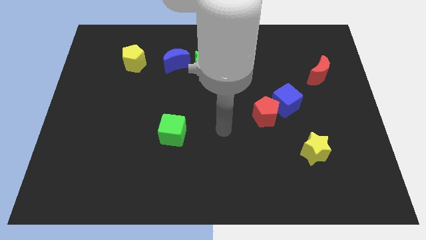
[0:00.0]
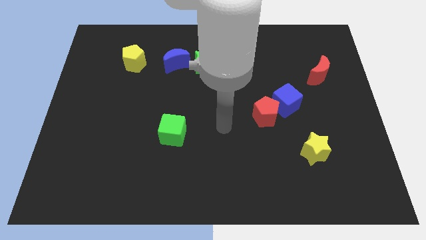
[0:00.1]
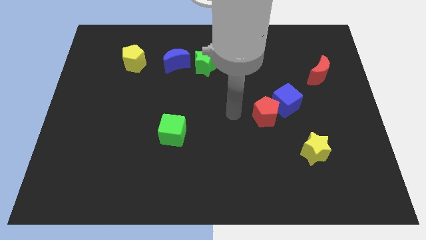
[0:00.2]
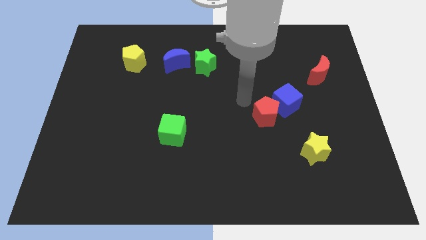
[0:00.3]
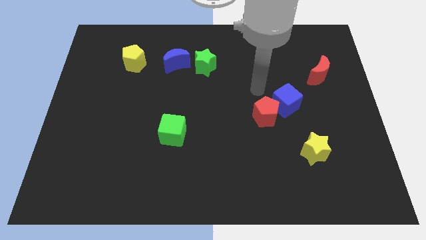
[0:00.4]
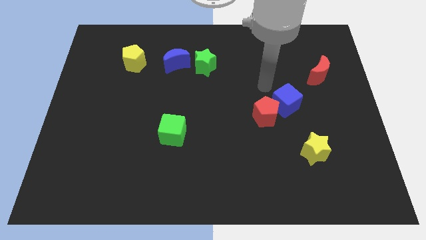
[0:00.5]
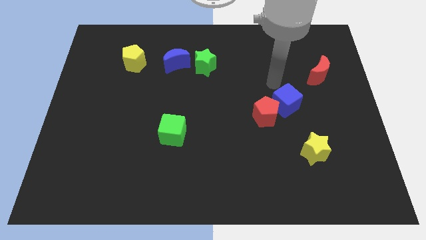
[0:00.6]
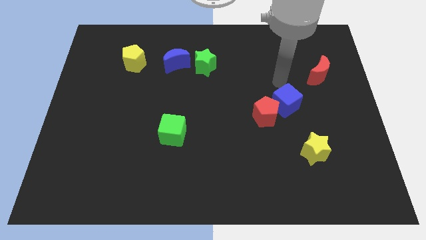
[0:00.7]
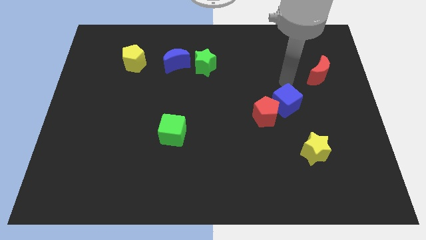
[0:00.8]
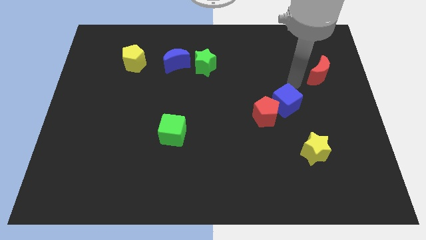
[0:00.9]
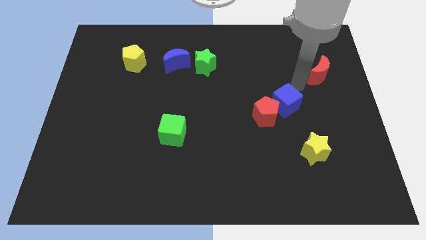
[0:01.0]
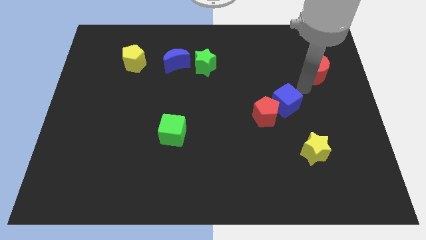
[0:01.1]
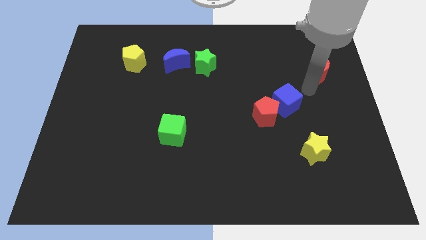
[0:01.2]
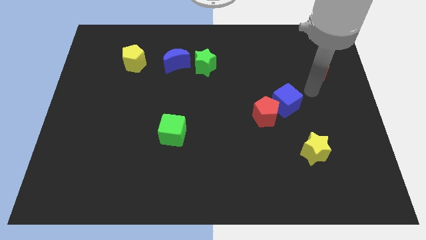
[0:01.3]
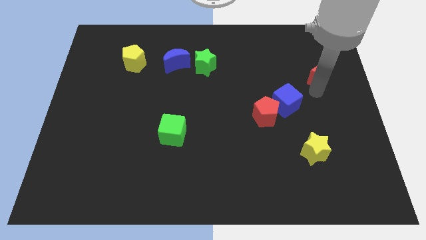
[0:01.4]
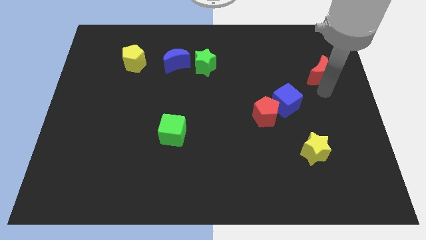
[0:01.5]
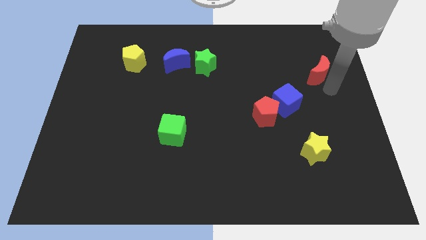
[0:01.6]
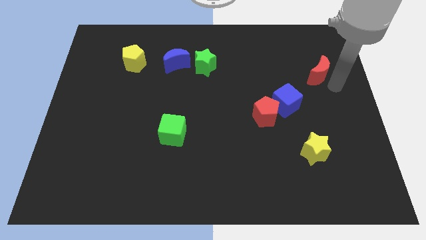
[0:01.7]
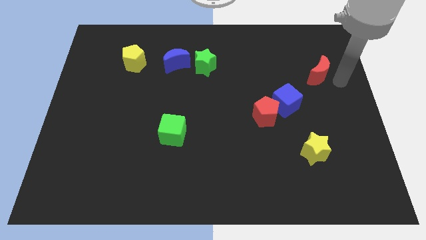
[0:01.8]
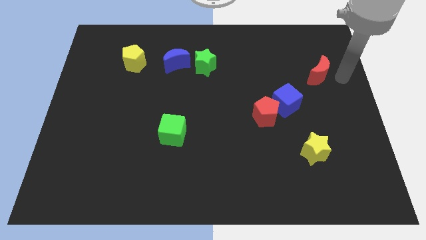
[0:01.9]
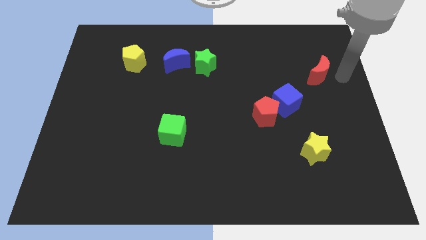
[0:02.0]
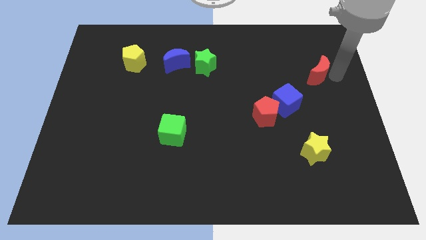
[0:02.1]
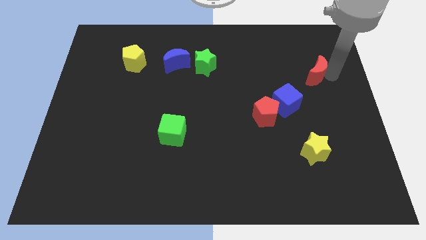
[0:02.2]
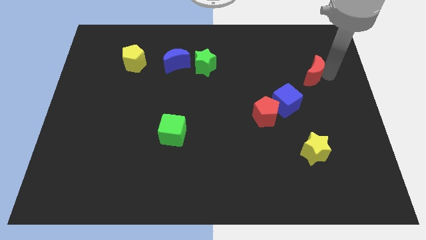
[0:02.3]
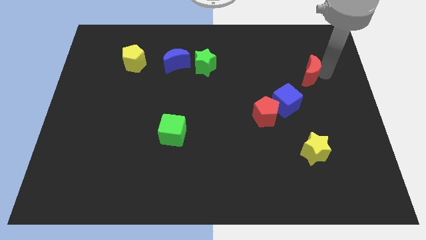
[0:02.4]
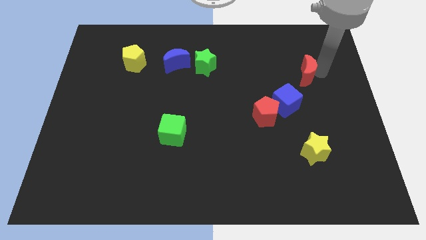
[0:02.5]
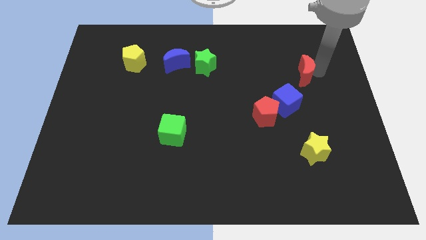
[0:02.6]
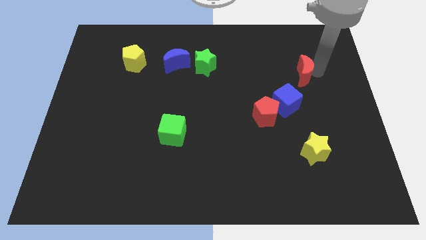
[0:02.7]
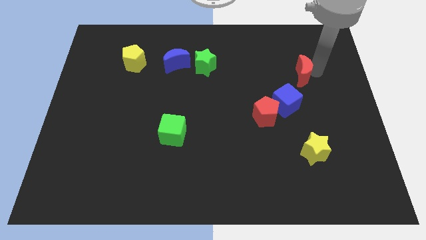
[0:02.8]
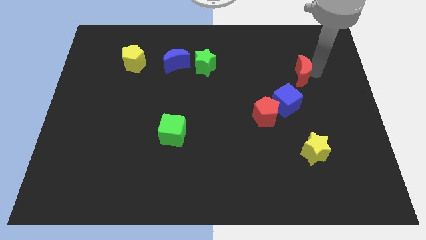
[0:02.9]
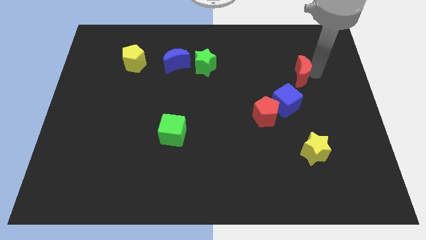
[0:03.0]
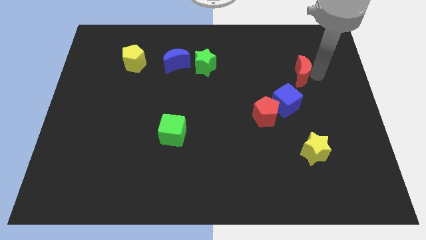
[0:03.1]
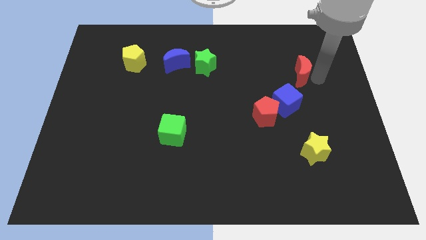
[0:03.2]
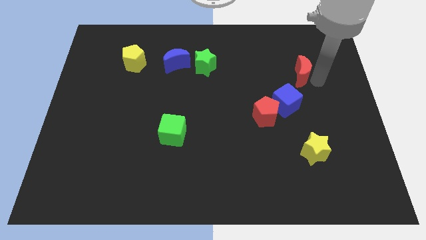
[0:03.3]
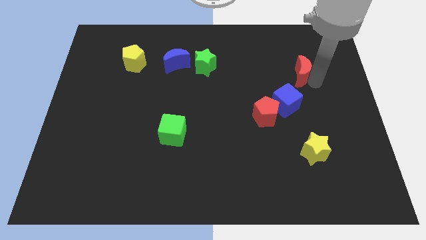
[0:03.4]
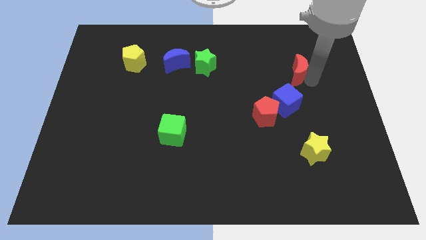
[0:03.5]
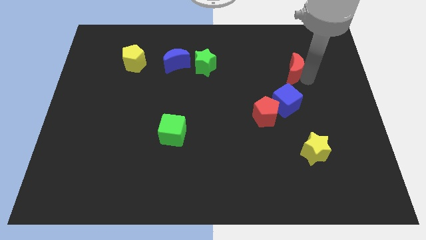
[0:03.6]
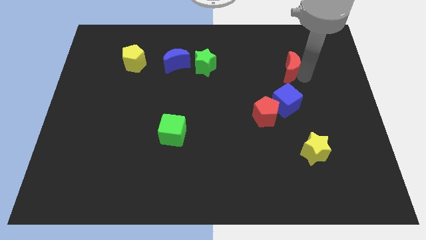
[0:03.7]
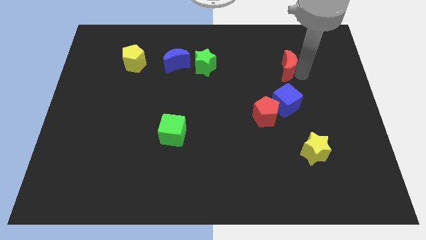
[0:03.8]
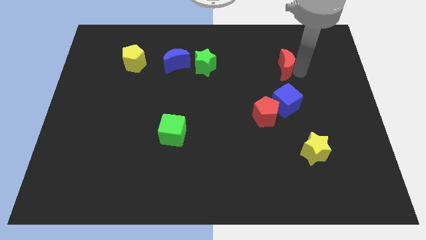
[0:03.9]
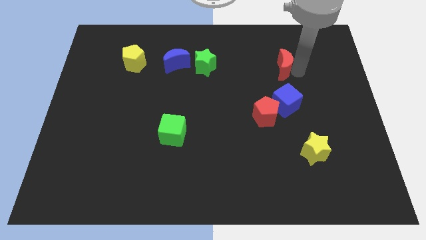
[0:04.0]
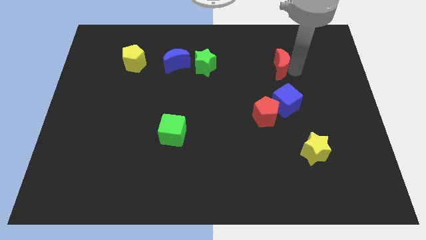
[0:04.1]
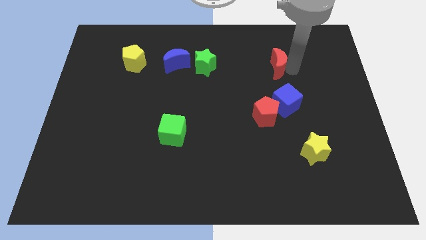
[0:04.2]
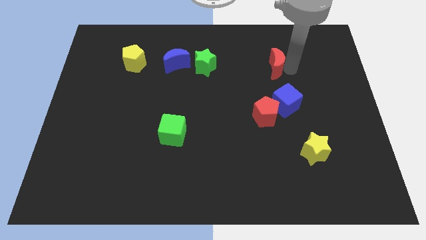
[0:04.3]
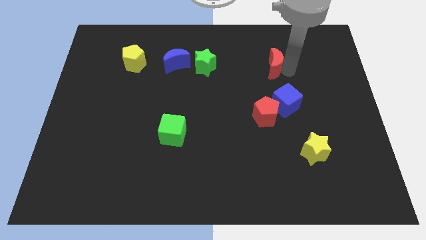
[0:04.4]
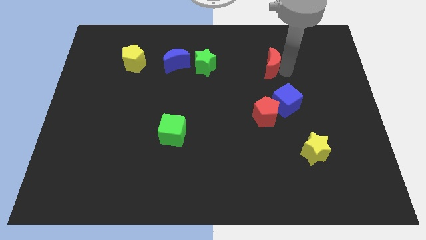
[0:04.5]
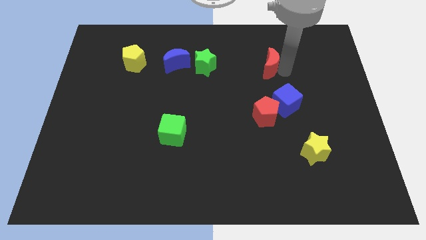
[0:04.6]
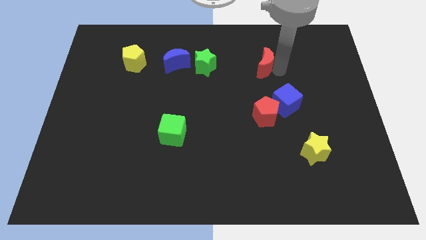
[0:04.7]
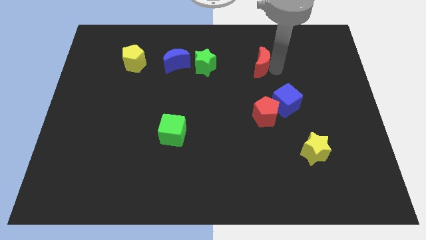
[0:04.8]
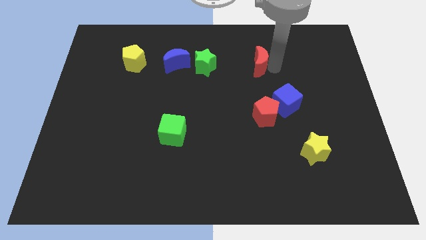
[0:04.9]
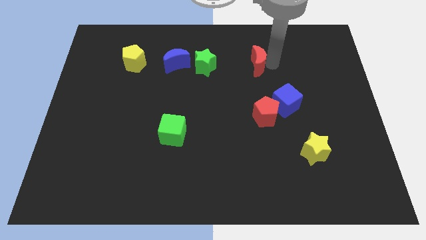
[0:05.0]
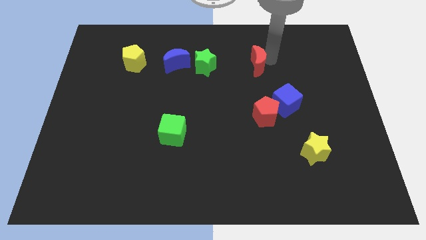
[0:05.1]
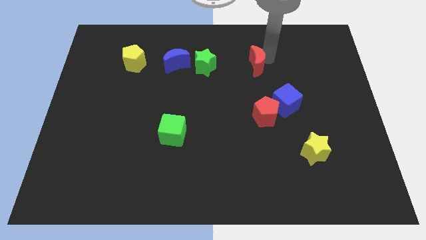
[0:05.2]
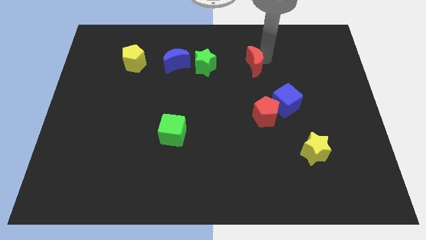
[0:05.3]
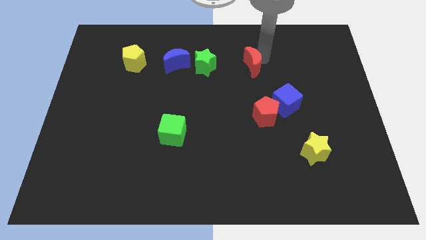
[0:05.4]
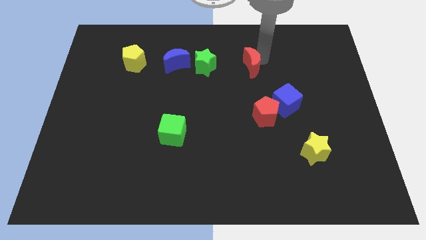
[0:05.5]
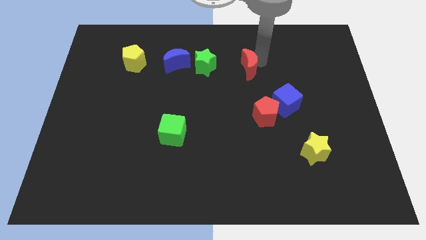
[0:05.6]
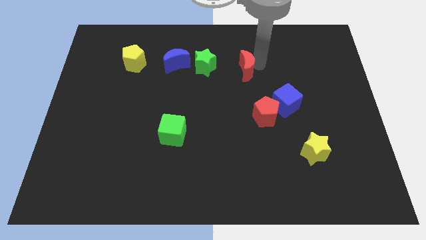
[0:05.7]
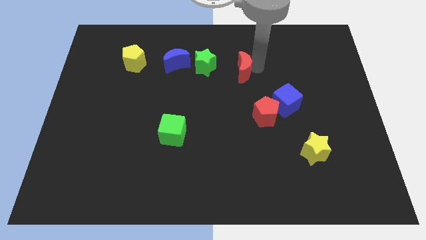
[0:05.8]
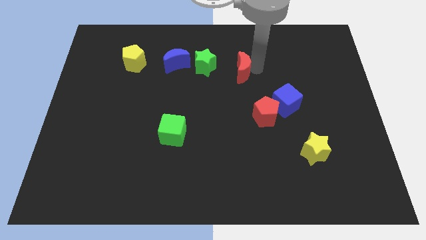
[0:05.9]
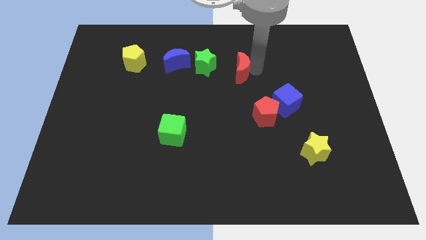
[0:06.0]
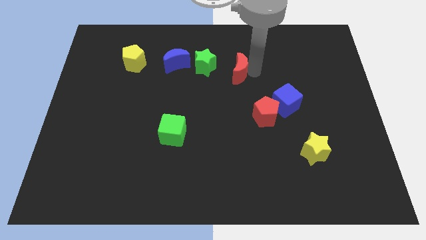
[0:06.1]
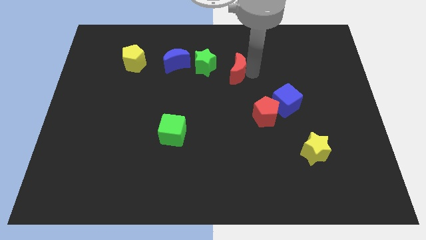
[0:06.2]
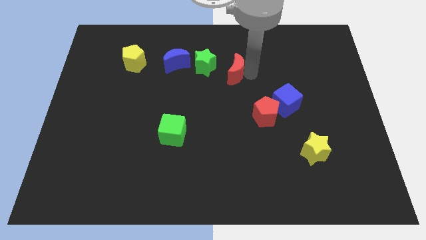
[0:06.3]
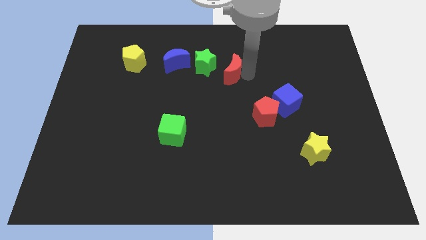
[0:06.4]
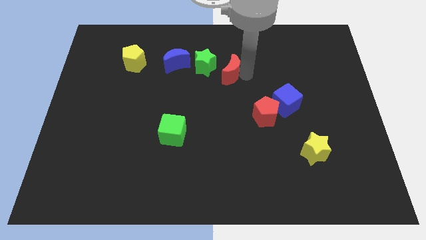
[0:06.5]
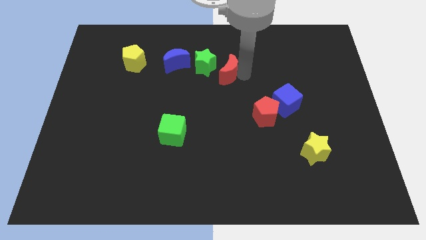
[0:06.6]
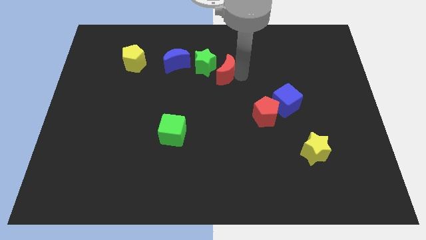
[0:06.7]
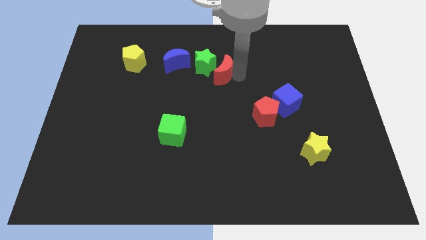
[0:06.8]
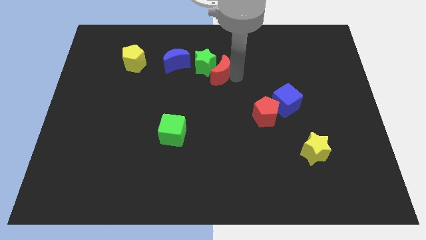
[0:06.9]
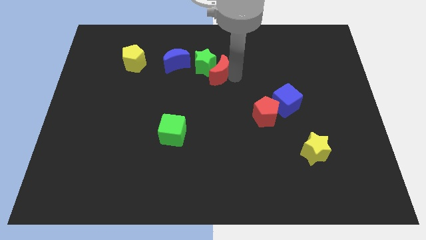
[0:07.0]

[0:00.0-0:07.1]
push the red moon to the green star

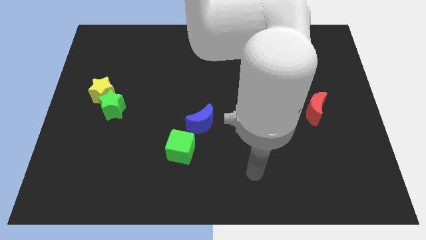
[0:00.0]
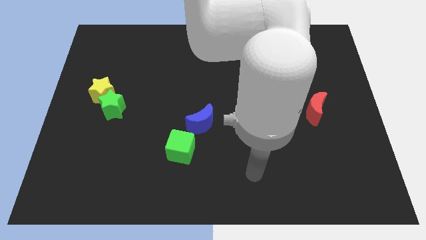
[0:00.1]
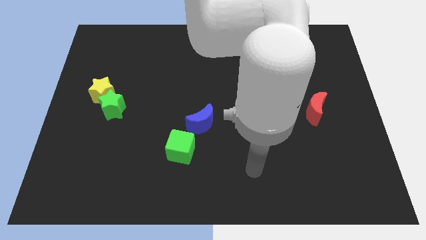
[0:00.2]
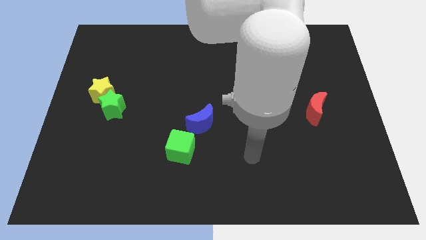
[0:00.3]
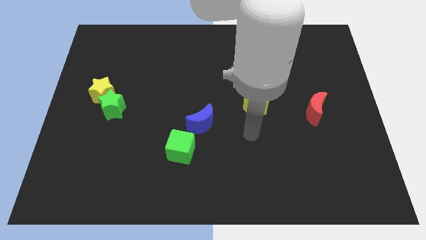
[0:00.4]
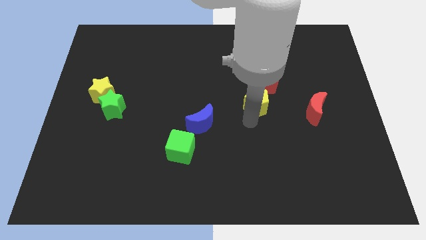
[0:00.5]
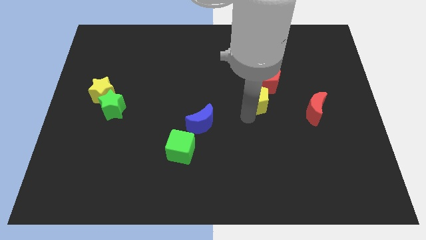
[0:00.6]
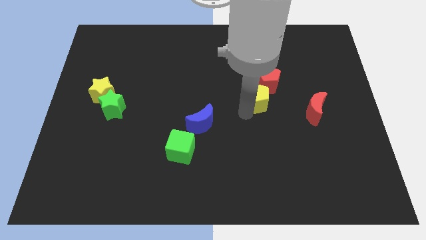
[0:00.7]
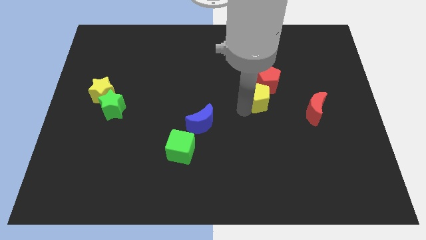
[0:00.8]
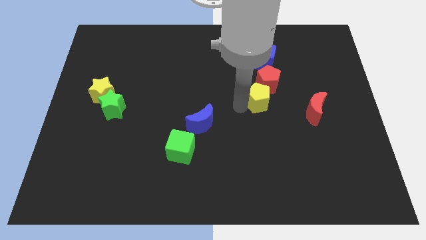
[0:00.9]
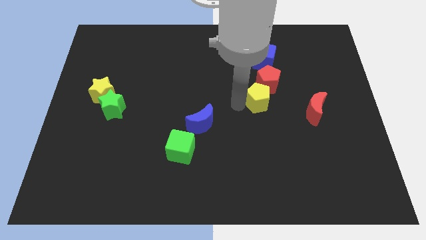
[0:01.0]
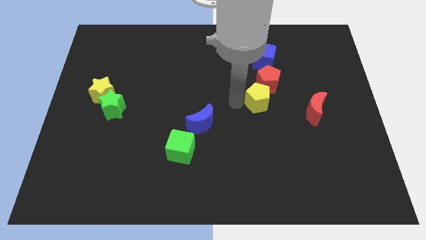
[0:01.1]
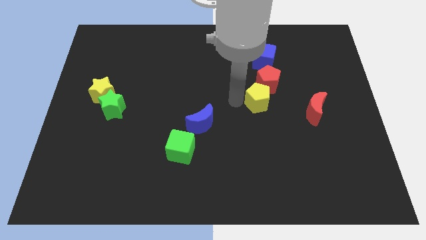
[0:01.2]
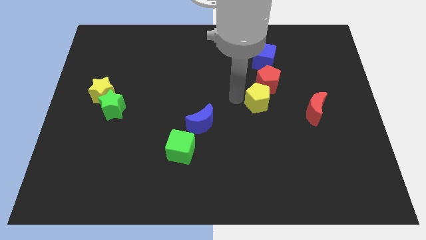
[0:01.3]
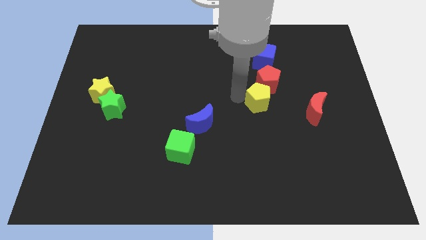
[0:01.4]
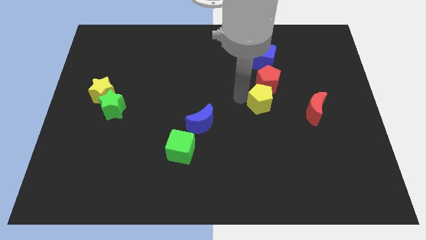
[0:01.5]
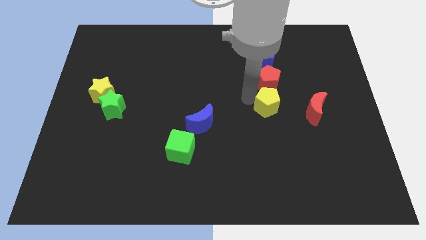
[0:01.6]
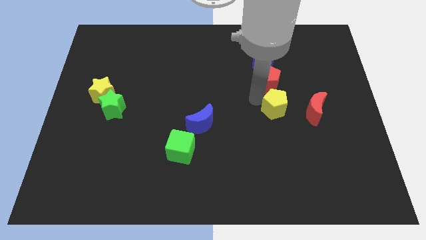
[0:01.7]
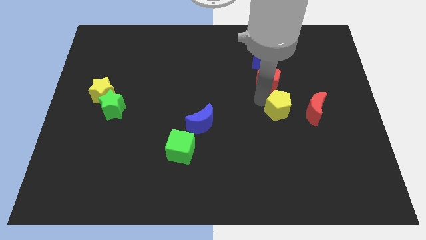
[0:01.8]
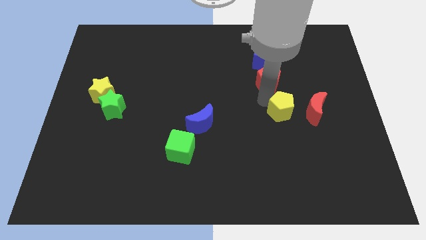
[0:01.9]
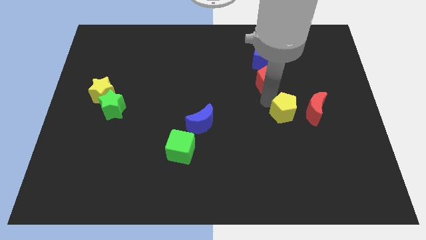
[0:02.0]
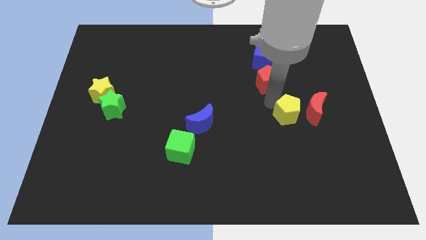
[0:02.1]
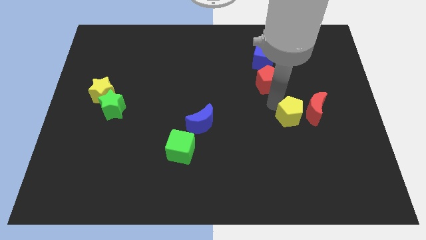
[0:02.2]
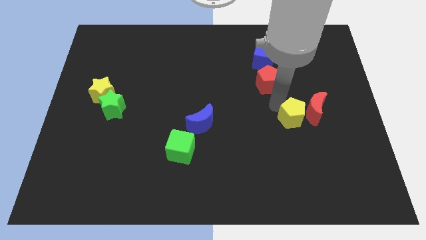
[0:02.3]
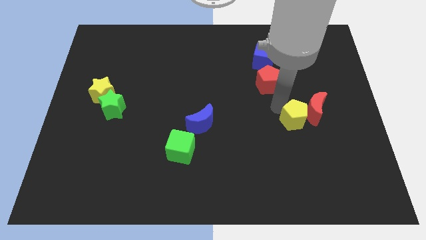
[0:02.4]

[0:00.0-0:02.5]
put the yellow pentagon next to the red moon
